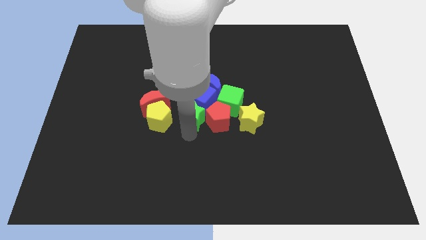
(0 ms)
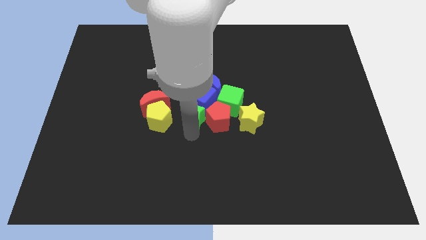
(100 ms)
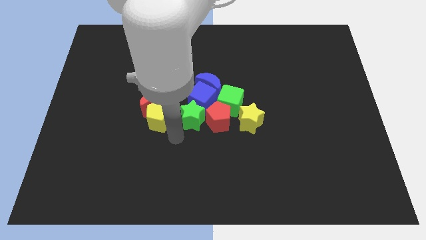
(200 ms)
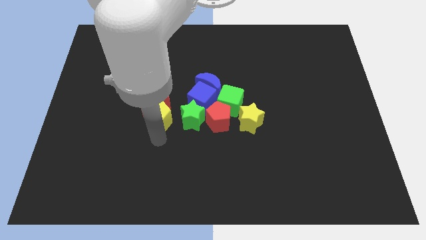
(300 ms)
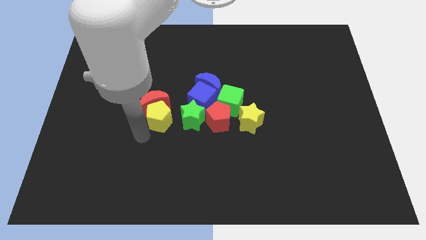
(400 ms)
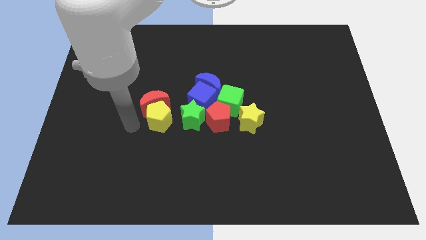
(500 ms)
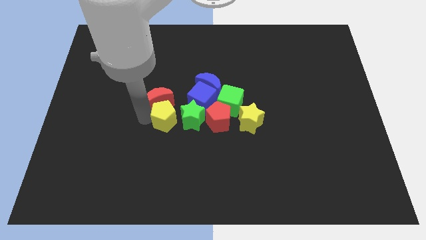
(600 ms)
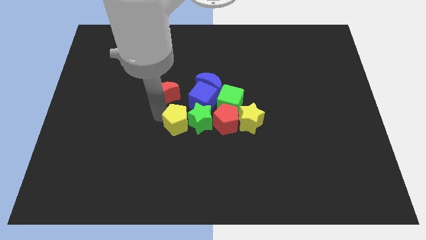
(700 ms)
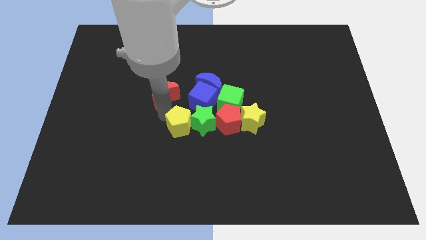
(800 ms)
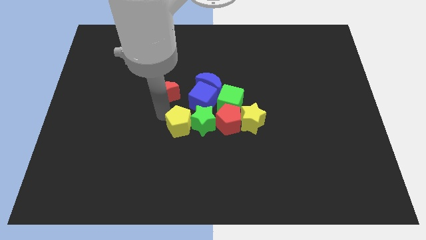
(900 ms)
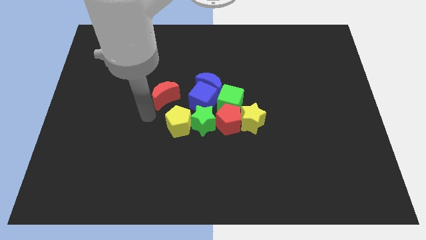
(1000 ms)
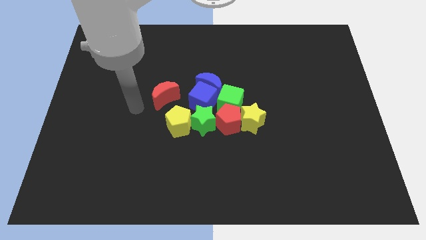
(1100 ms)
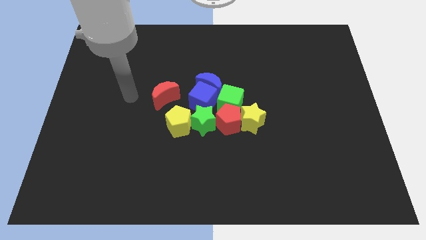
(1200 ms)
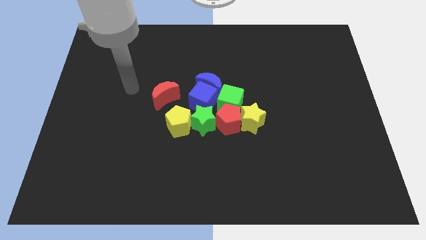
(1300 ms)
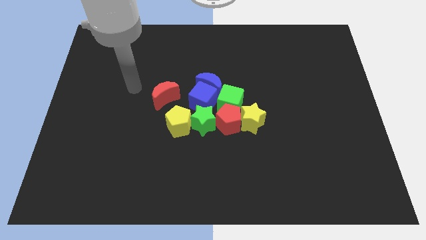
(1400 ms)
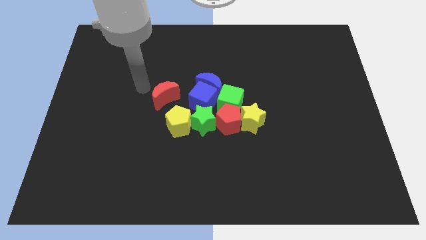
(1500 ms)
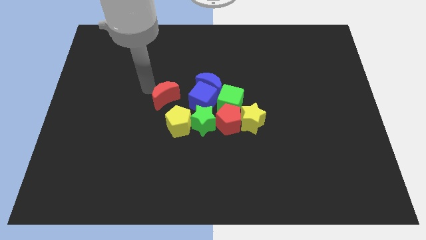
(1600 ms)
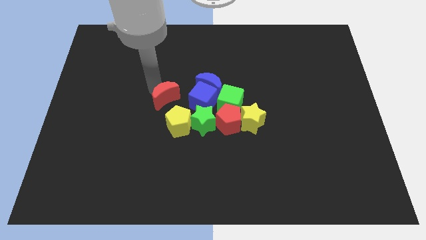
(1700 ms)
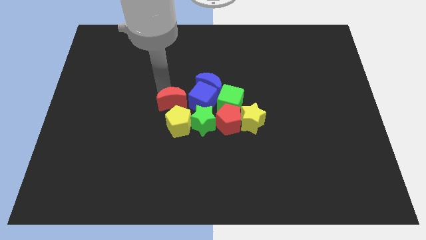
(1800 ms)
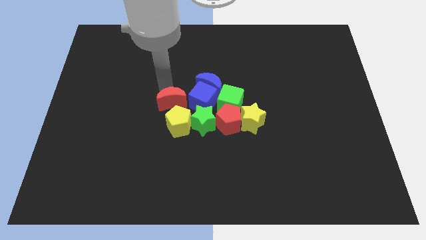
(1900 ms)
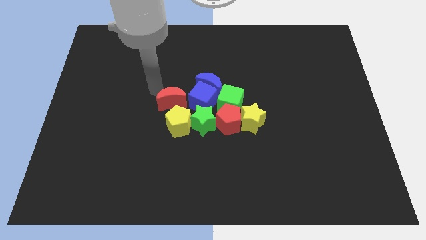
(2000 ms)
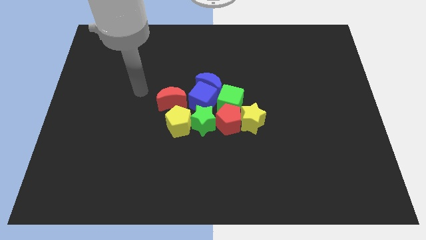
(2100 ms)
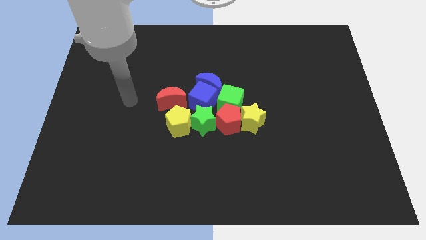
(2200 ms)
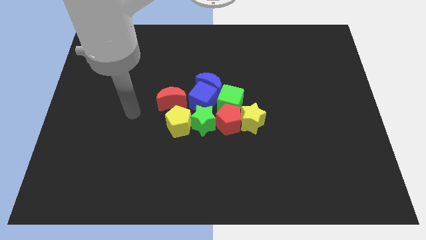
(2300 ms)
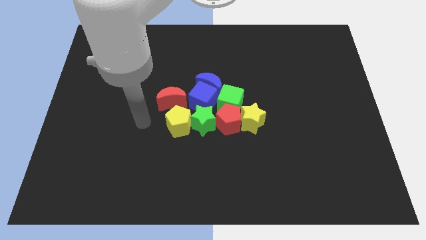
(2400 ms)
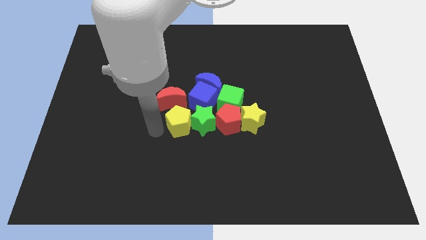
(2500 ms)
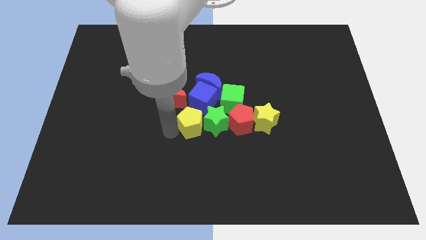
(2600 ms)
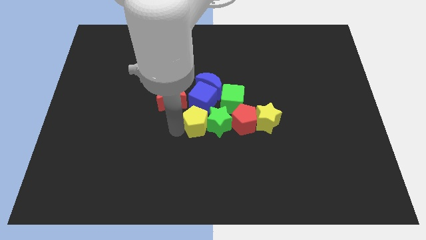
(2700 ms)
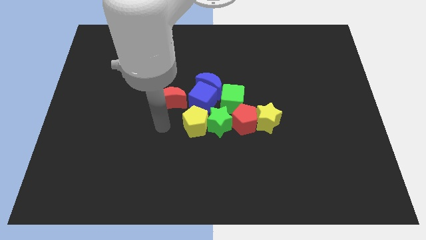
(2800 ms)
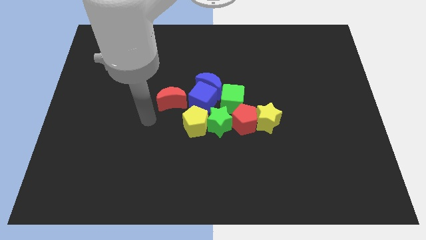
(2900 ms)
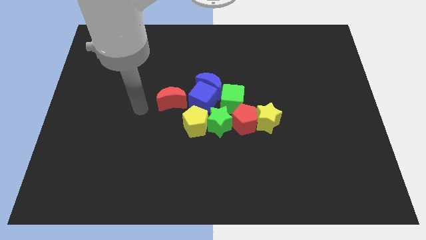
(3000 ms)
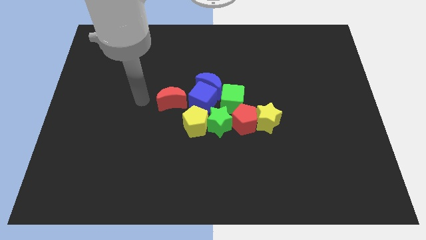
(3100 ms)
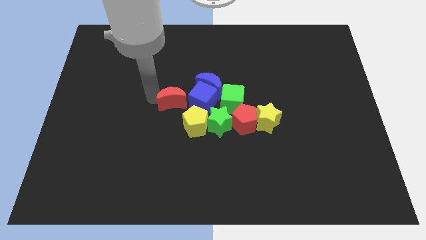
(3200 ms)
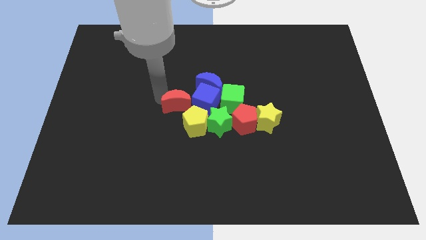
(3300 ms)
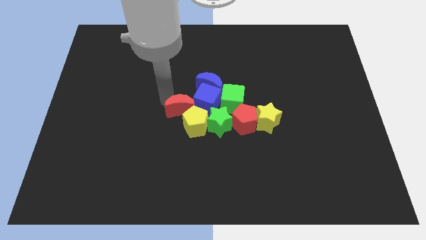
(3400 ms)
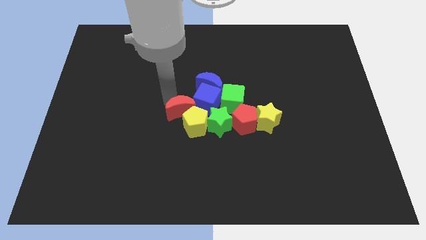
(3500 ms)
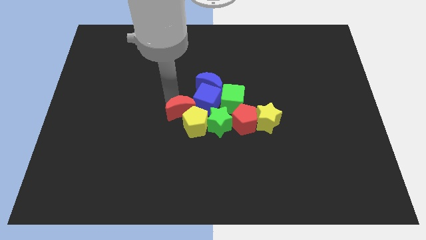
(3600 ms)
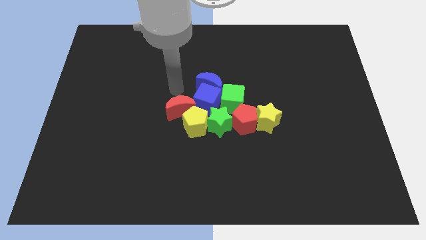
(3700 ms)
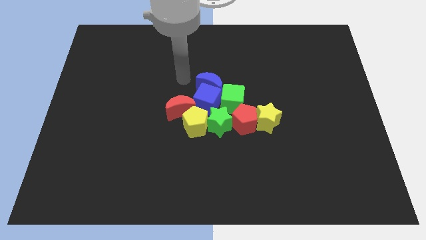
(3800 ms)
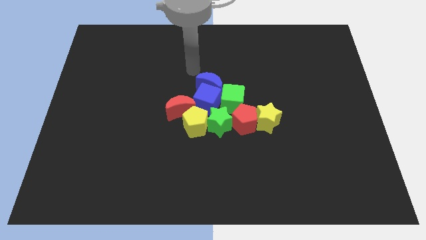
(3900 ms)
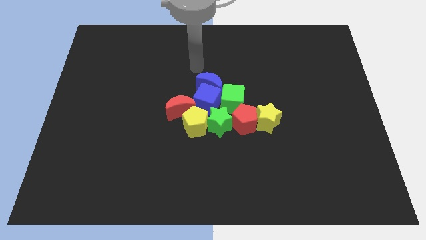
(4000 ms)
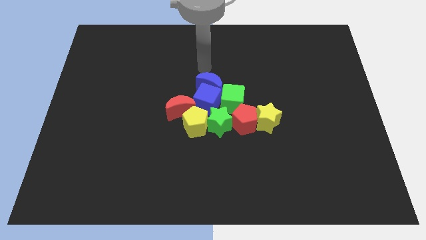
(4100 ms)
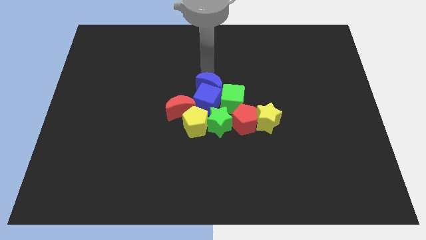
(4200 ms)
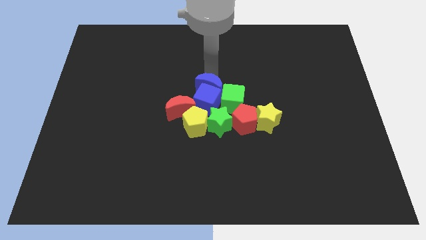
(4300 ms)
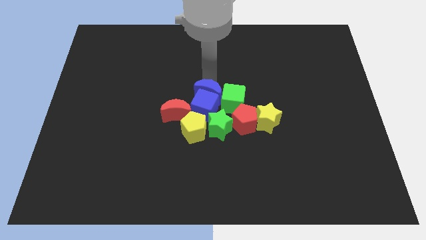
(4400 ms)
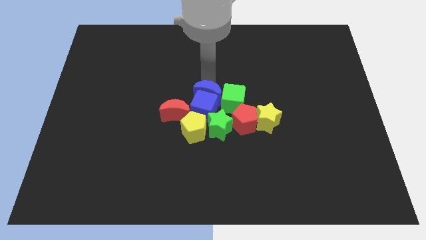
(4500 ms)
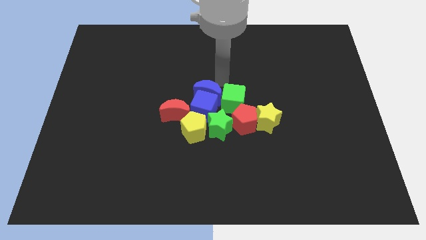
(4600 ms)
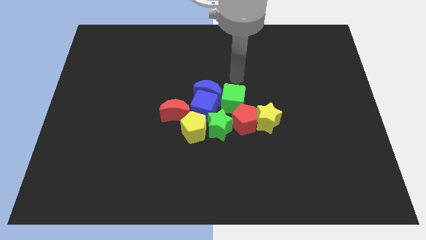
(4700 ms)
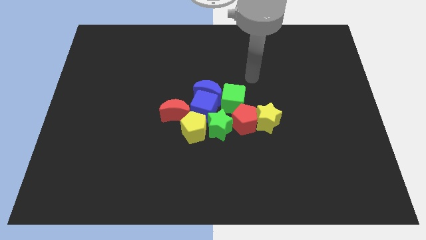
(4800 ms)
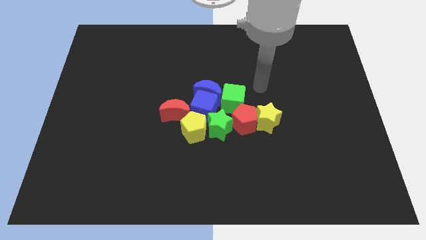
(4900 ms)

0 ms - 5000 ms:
arrange the group of blocks at thecenter of the table

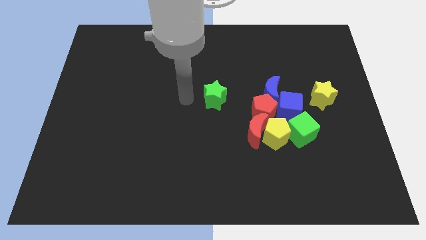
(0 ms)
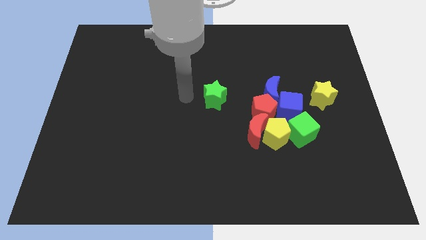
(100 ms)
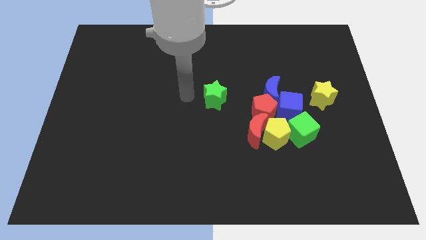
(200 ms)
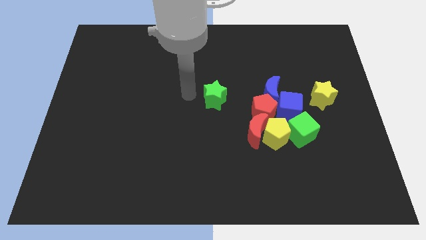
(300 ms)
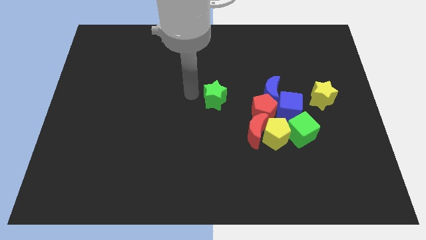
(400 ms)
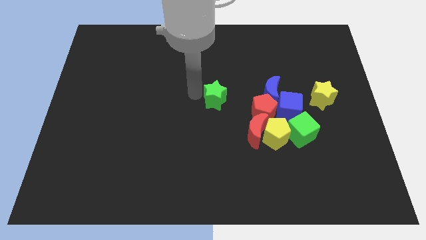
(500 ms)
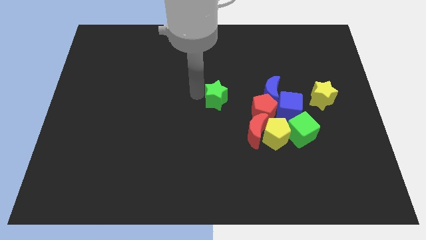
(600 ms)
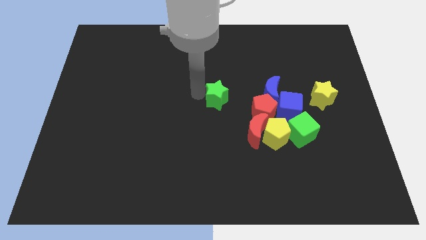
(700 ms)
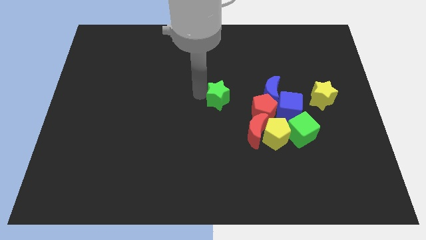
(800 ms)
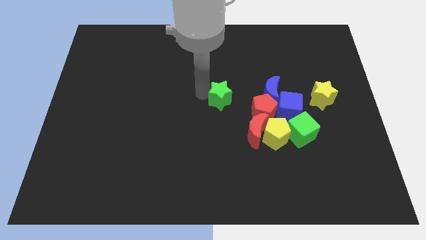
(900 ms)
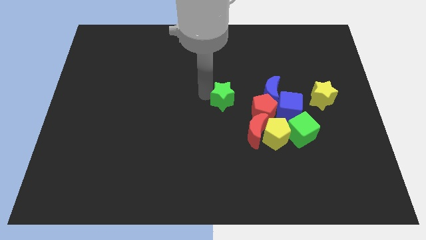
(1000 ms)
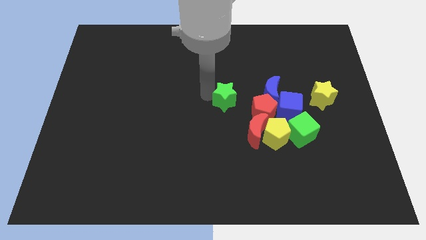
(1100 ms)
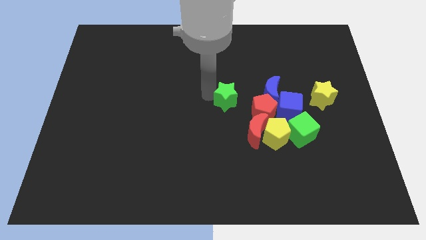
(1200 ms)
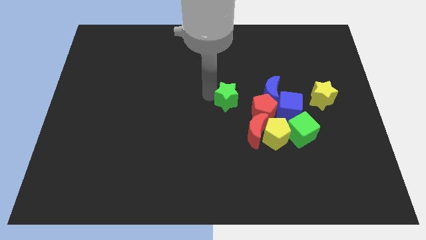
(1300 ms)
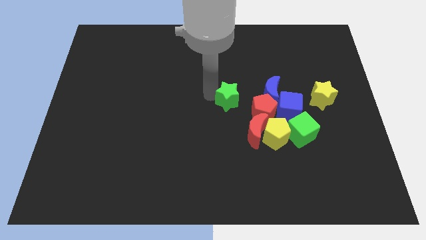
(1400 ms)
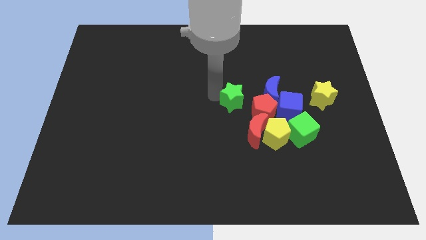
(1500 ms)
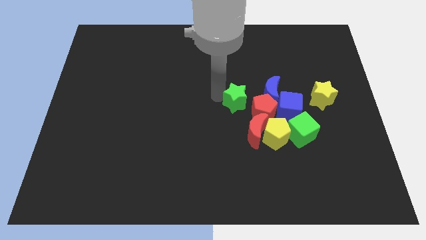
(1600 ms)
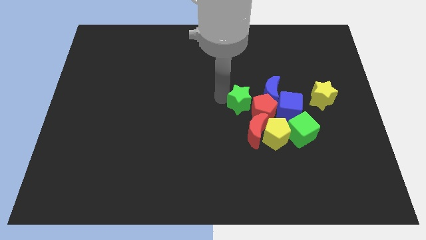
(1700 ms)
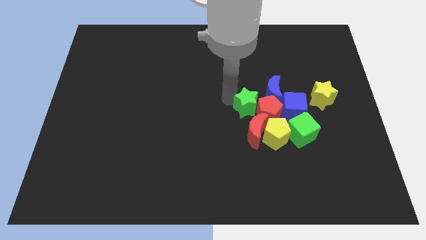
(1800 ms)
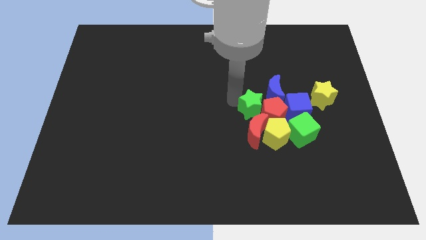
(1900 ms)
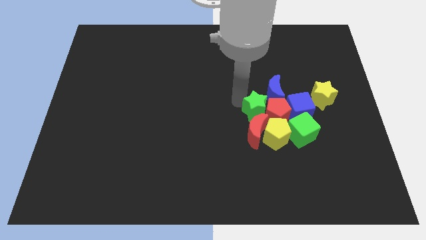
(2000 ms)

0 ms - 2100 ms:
move green star into the group of blocks

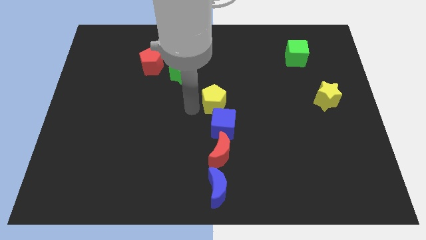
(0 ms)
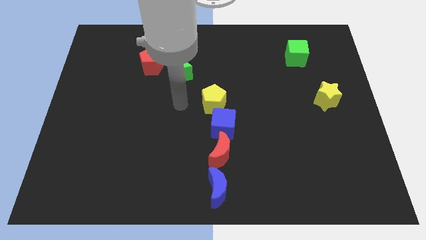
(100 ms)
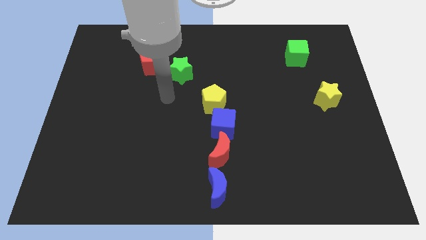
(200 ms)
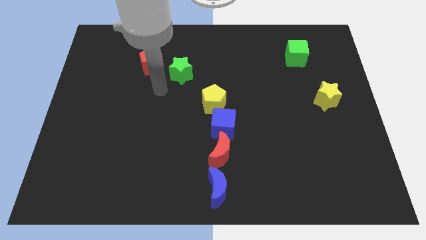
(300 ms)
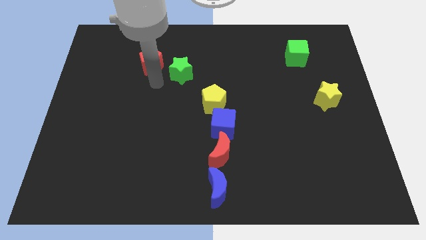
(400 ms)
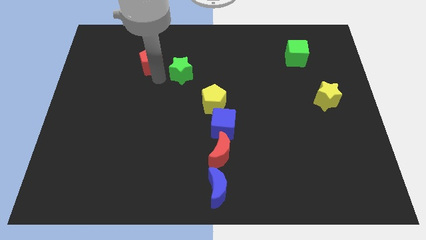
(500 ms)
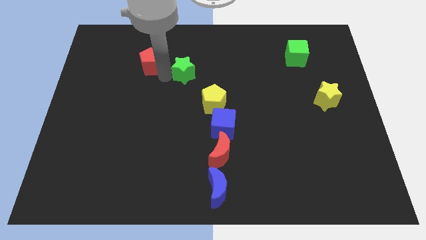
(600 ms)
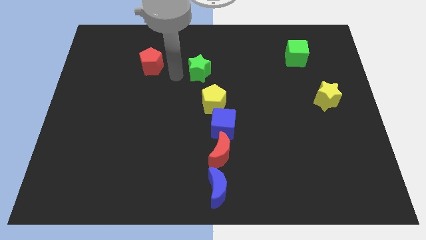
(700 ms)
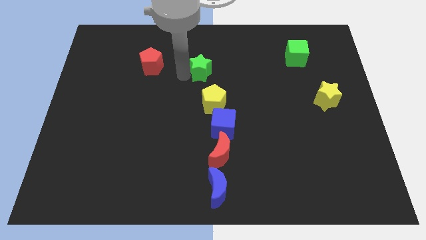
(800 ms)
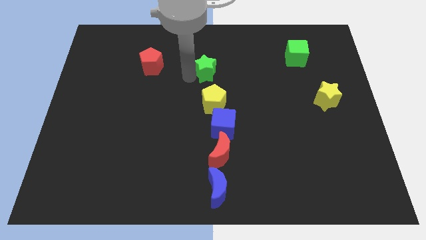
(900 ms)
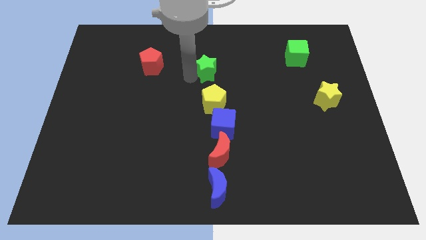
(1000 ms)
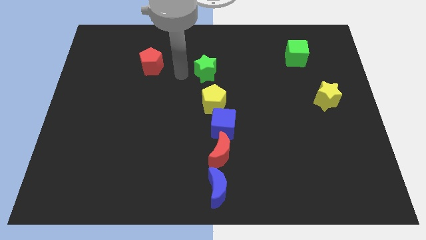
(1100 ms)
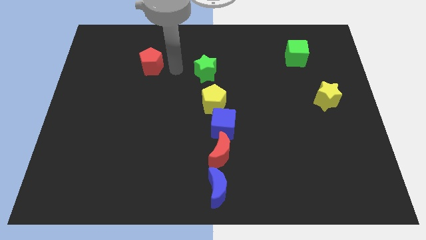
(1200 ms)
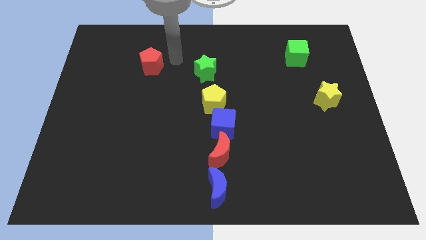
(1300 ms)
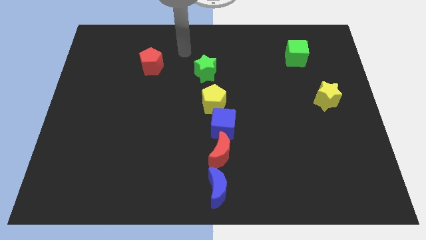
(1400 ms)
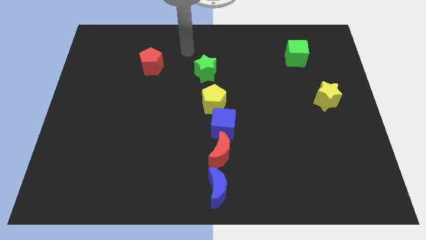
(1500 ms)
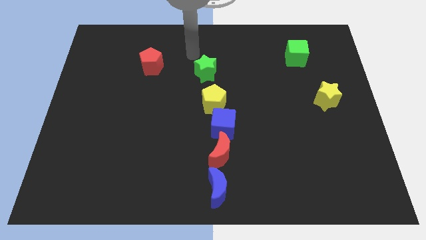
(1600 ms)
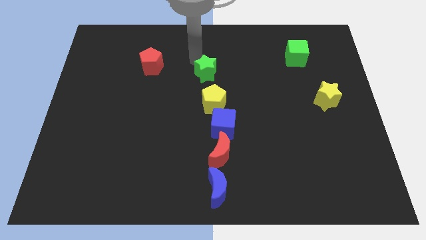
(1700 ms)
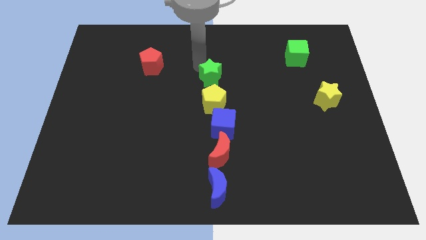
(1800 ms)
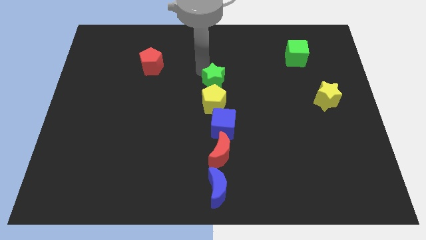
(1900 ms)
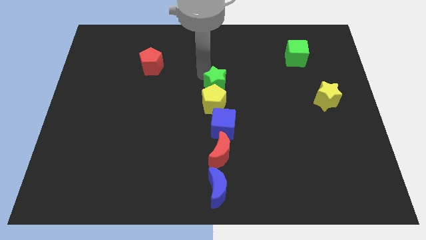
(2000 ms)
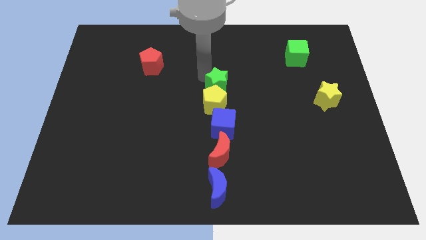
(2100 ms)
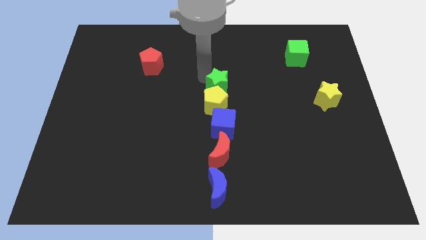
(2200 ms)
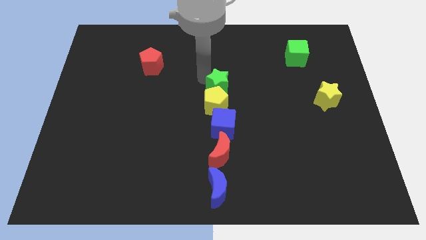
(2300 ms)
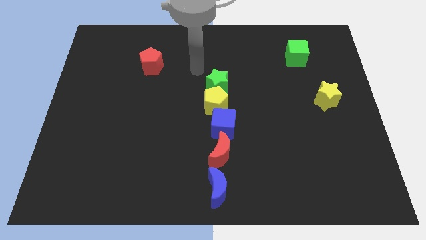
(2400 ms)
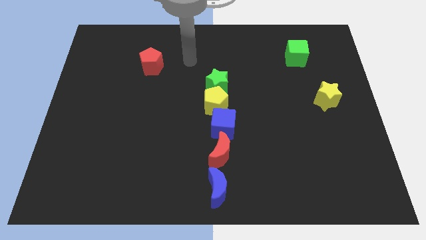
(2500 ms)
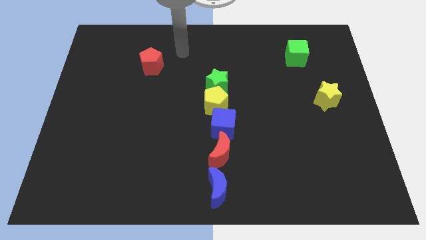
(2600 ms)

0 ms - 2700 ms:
place the green star at the top of yellow pentagon
